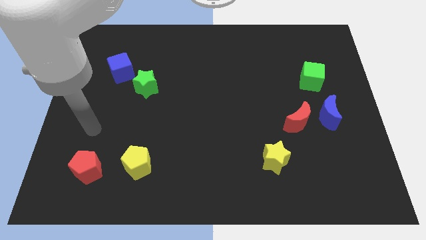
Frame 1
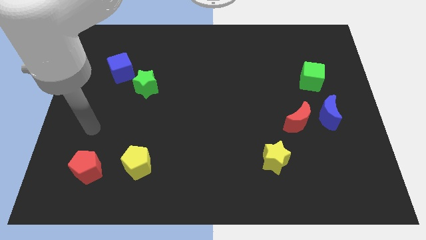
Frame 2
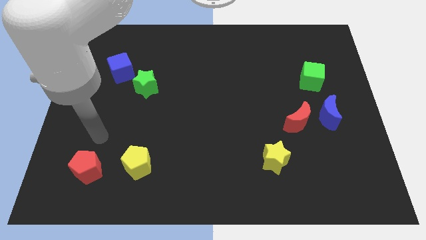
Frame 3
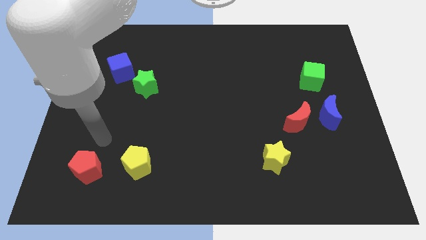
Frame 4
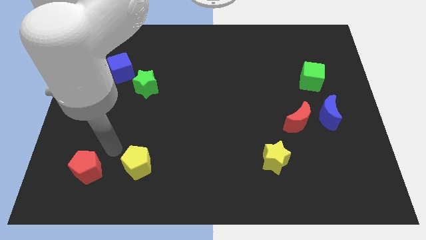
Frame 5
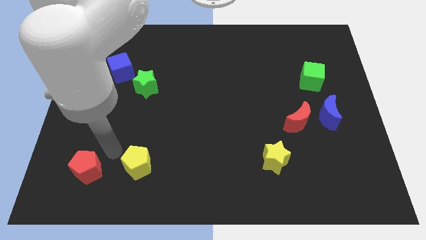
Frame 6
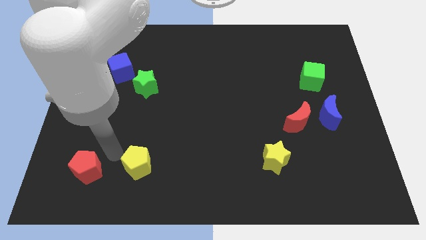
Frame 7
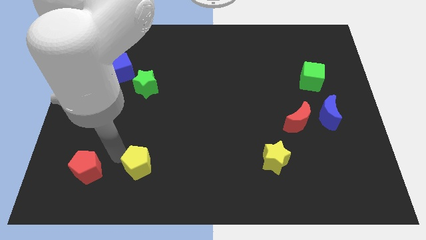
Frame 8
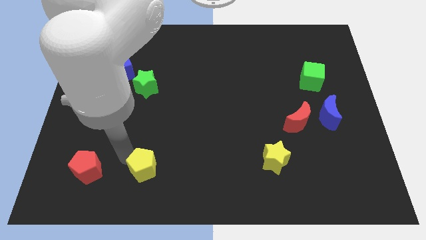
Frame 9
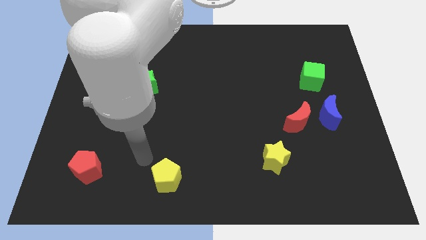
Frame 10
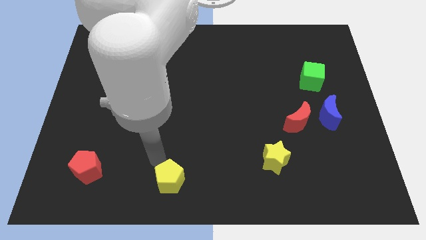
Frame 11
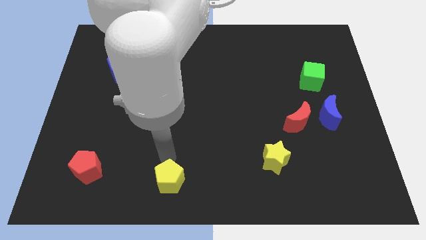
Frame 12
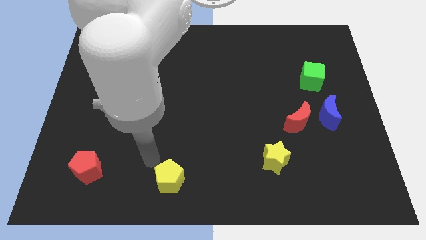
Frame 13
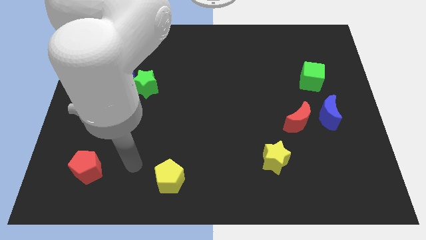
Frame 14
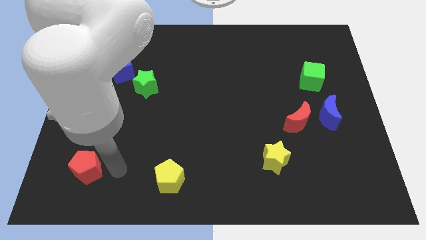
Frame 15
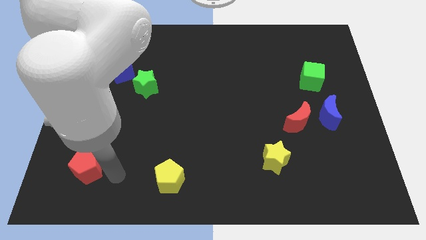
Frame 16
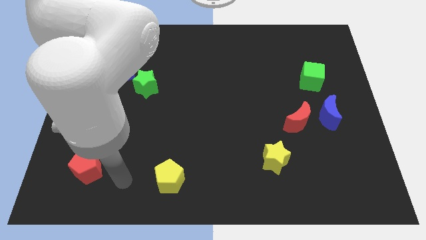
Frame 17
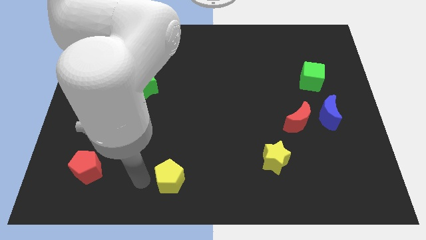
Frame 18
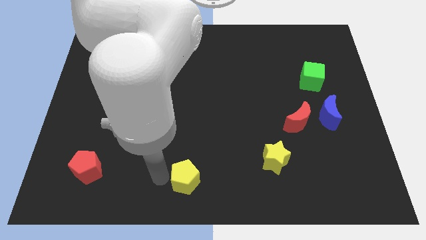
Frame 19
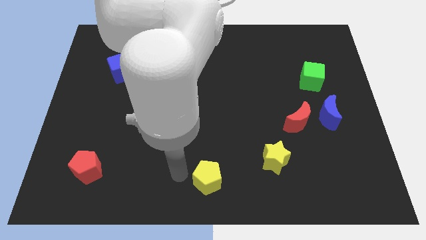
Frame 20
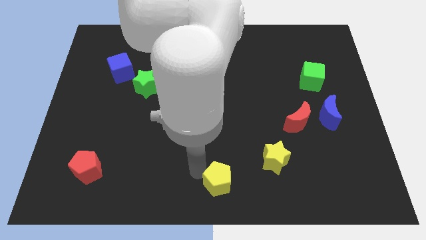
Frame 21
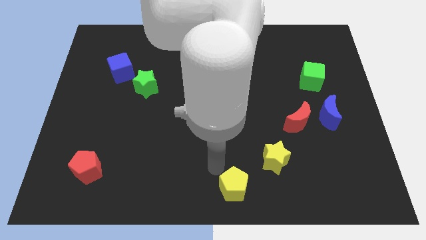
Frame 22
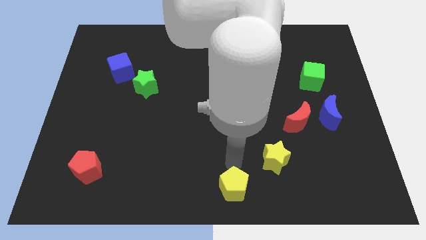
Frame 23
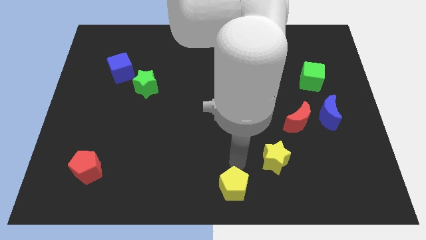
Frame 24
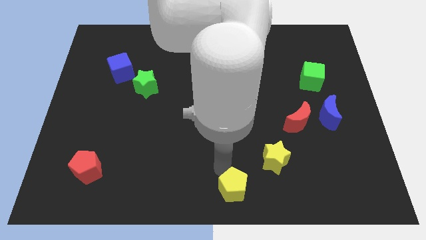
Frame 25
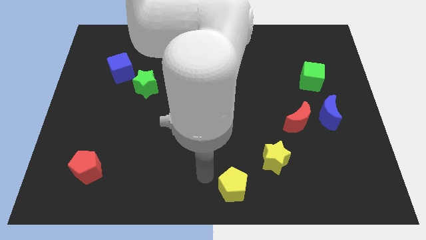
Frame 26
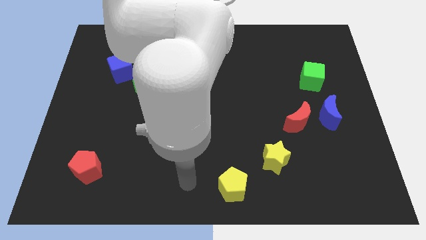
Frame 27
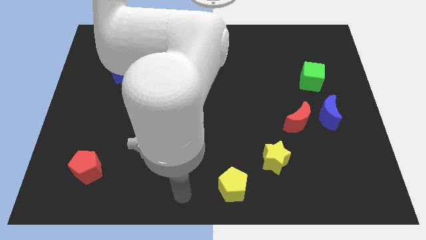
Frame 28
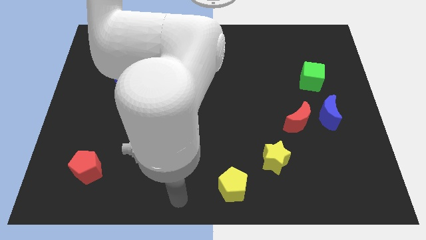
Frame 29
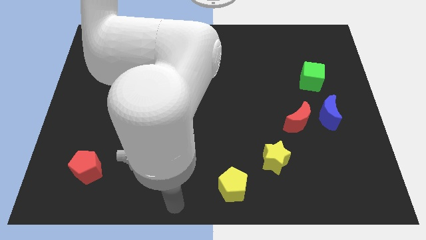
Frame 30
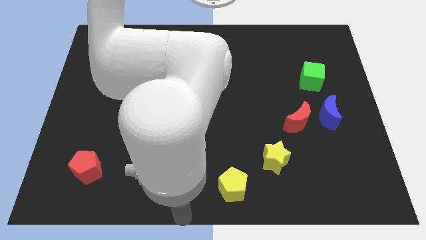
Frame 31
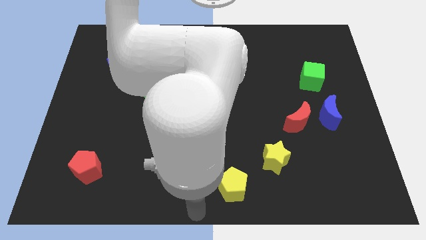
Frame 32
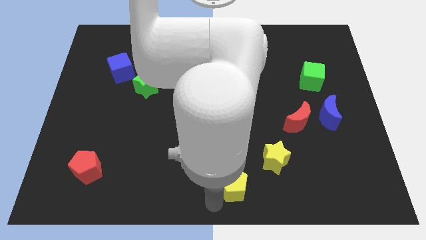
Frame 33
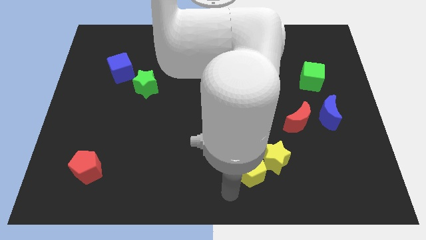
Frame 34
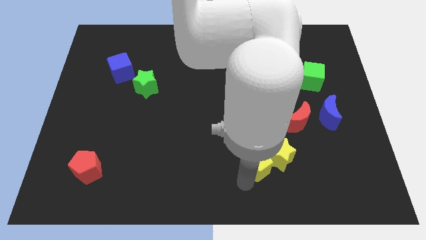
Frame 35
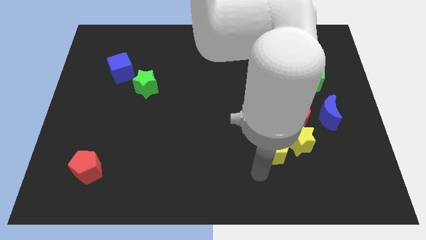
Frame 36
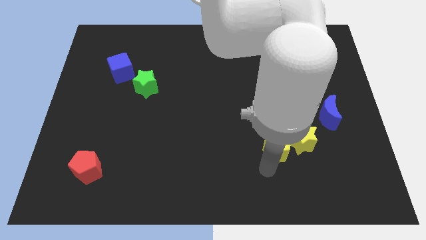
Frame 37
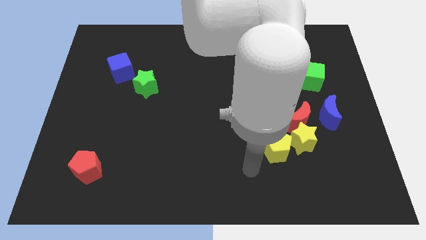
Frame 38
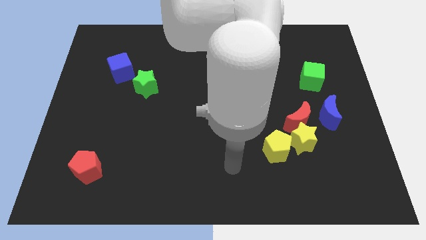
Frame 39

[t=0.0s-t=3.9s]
push the yellow pentagon into yellow star

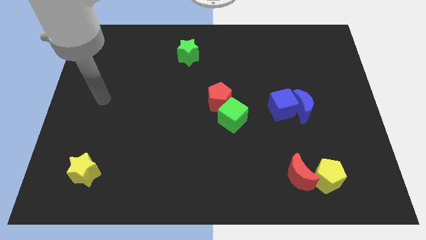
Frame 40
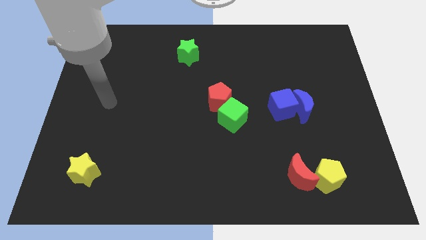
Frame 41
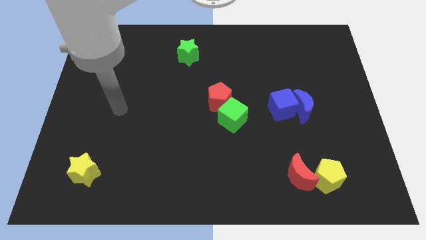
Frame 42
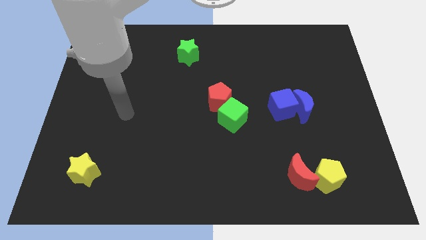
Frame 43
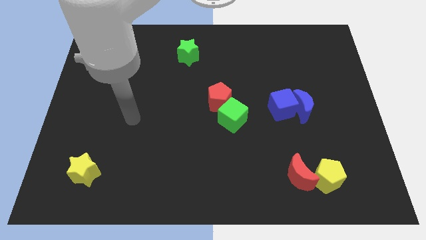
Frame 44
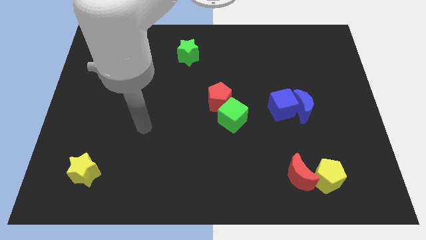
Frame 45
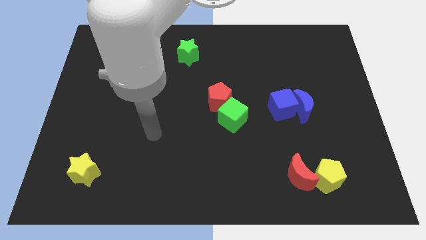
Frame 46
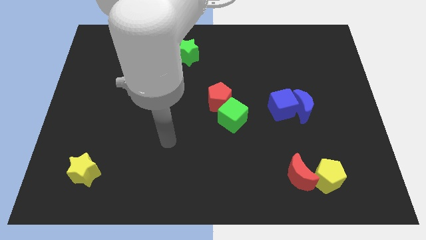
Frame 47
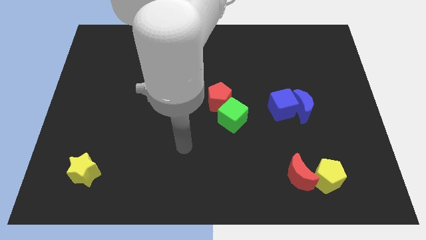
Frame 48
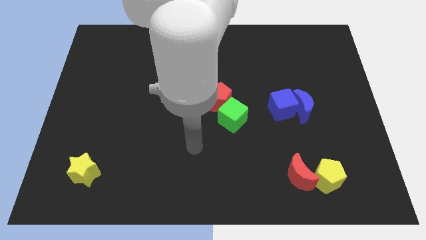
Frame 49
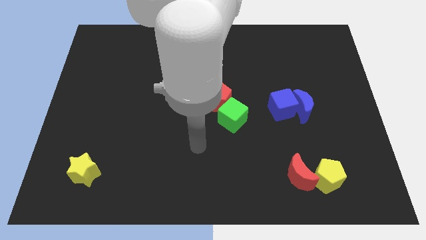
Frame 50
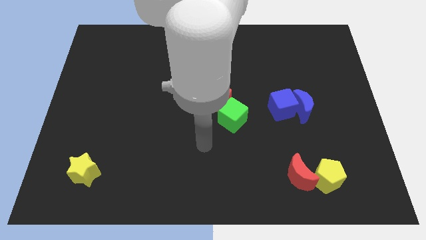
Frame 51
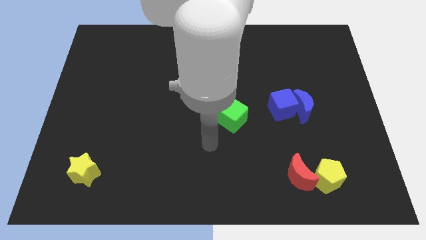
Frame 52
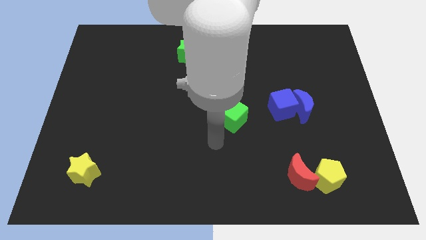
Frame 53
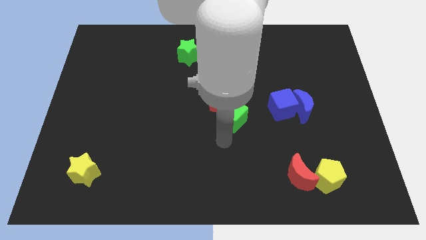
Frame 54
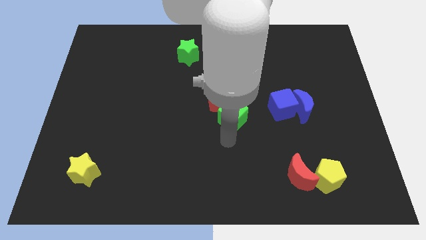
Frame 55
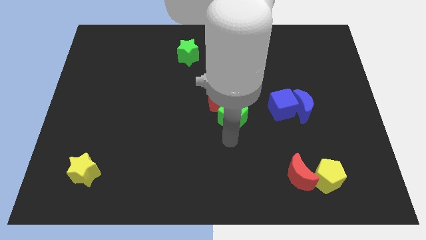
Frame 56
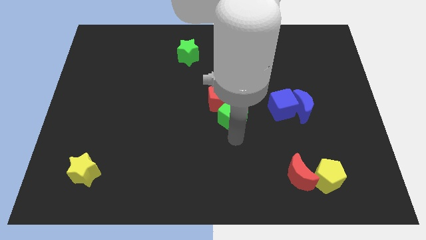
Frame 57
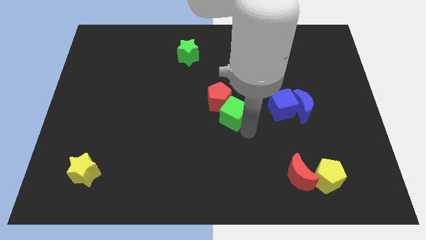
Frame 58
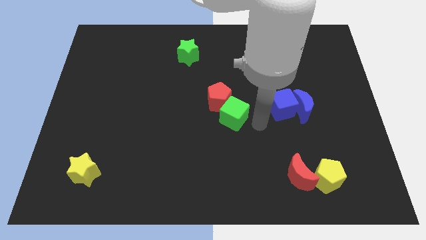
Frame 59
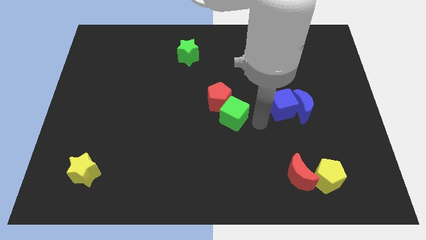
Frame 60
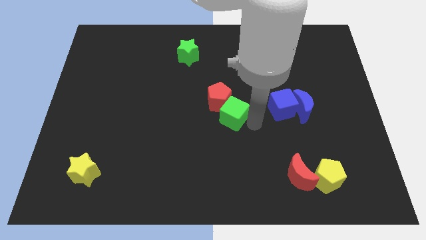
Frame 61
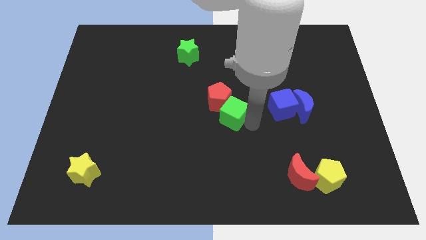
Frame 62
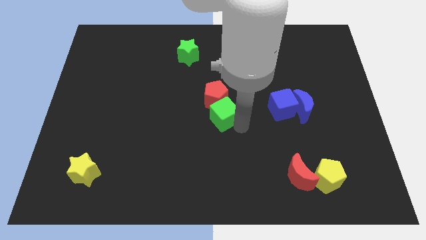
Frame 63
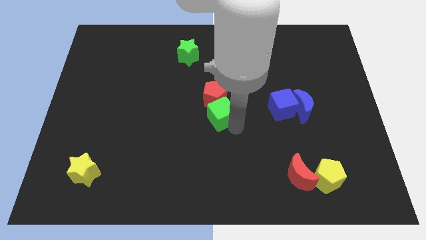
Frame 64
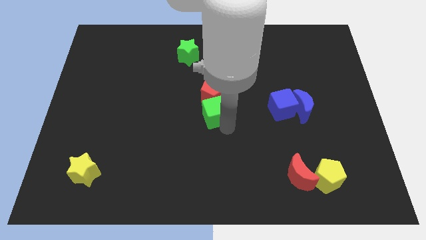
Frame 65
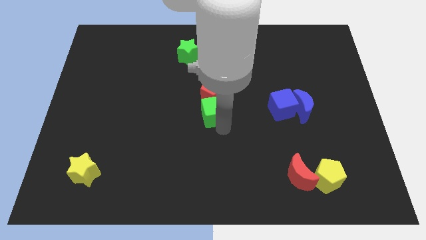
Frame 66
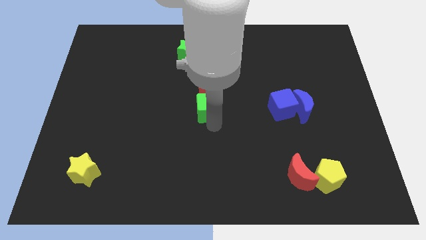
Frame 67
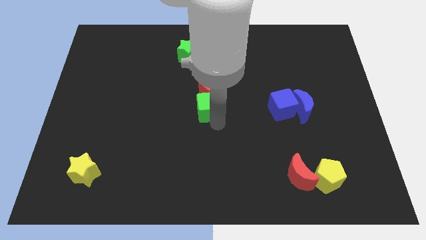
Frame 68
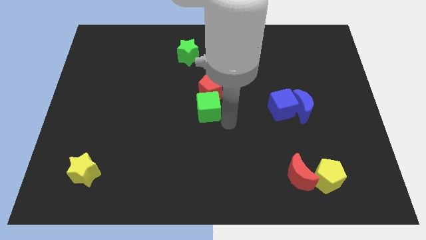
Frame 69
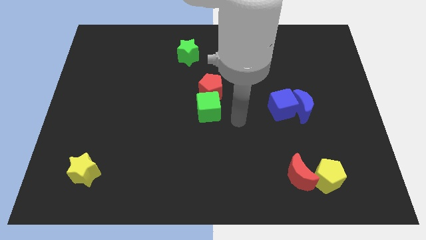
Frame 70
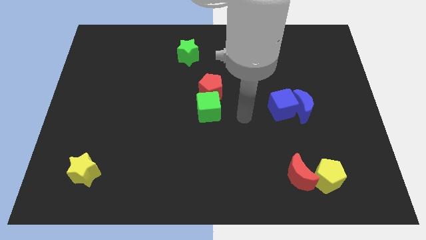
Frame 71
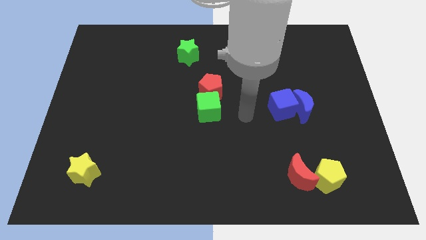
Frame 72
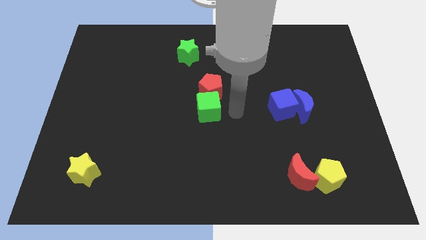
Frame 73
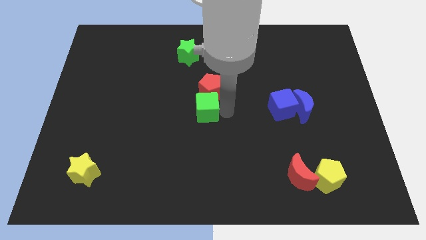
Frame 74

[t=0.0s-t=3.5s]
move the green cube towards the left

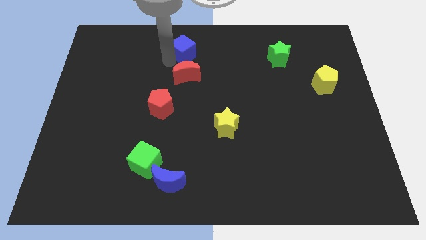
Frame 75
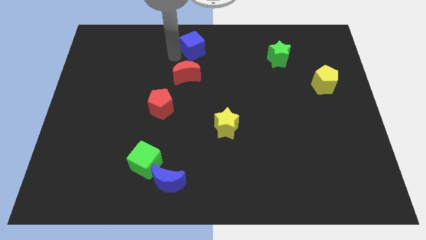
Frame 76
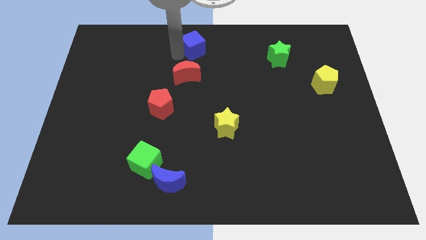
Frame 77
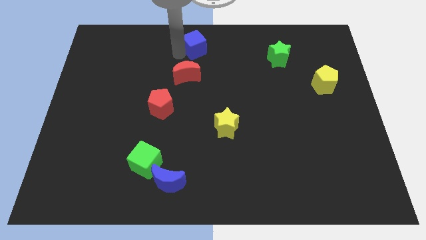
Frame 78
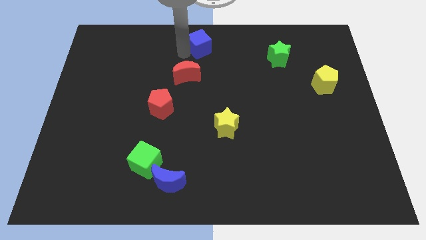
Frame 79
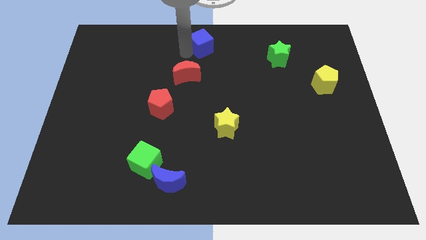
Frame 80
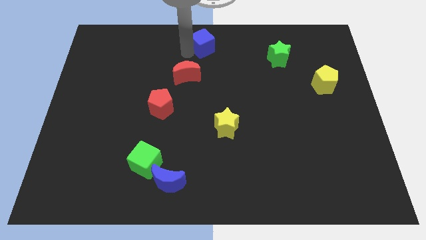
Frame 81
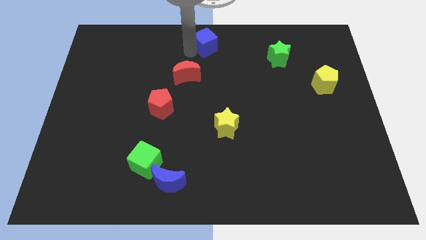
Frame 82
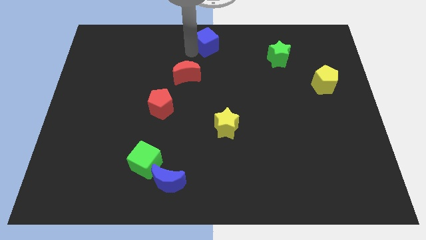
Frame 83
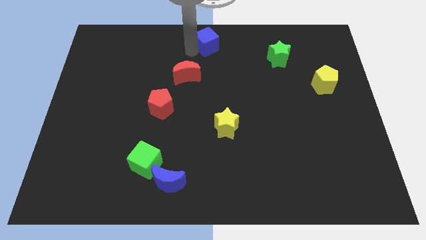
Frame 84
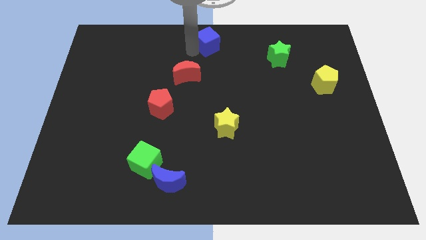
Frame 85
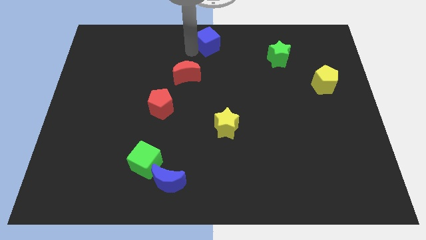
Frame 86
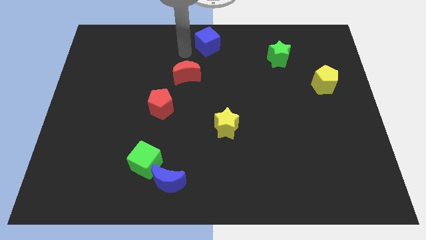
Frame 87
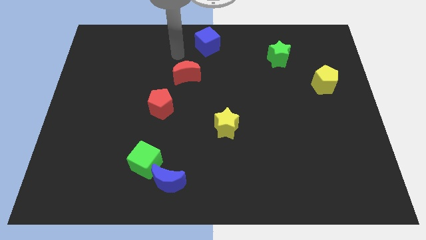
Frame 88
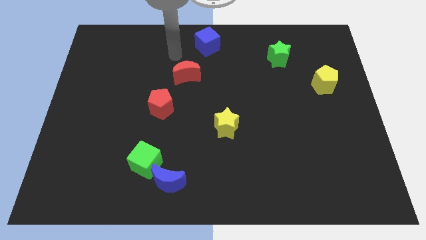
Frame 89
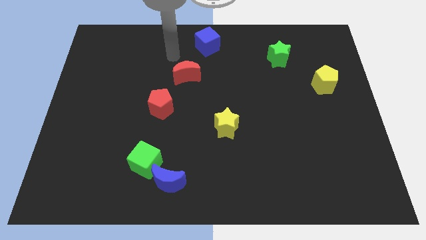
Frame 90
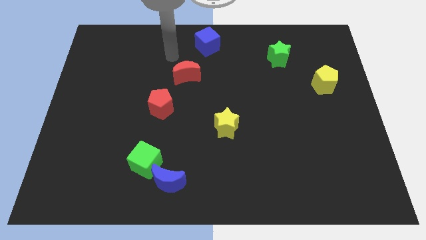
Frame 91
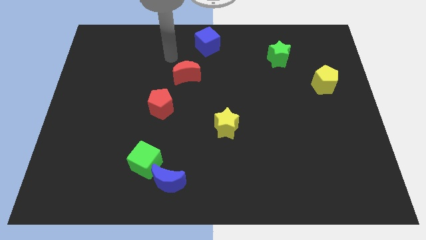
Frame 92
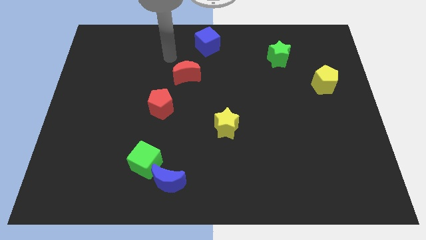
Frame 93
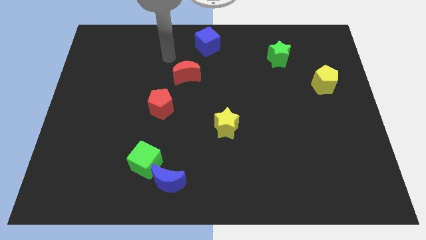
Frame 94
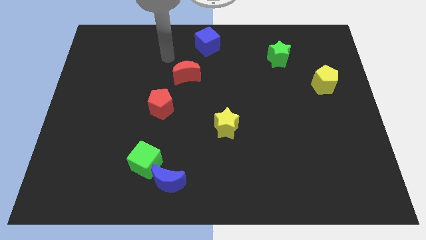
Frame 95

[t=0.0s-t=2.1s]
place the blue cube diagonal to the red crescent
